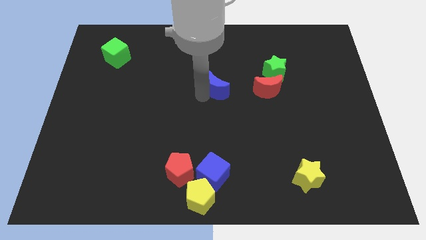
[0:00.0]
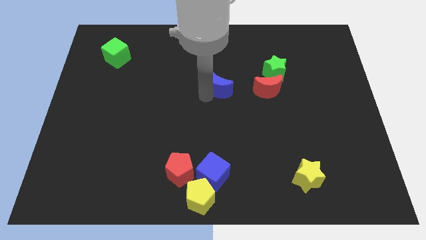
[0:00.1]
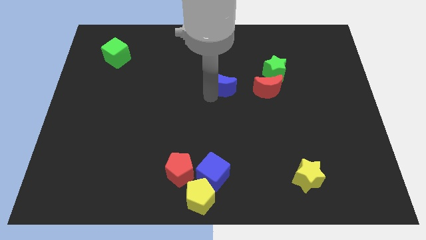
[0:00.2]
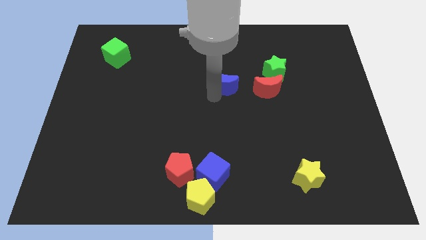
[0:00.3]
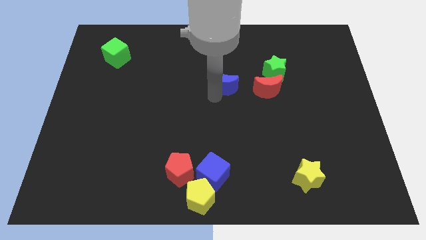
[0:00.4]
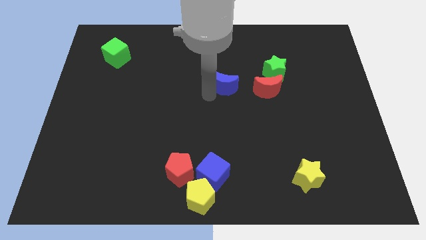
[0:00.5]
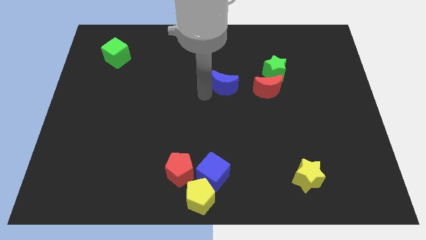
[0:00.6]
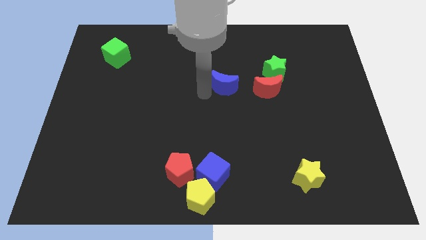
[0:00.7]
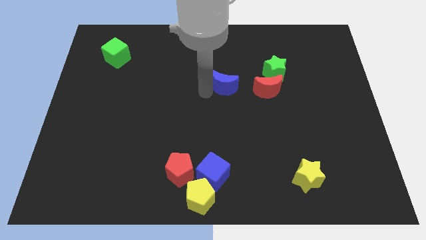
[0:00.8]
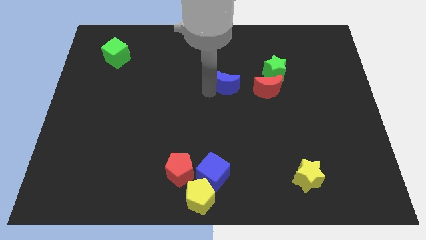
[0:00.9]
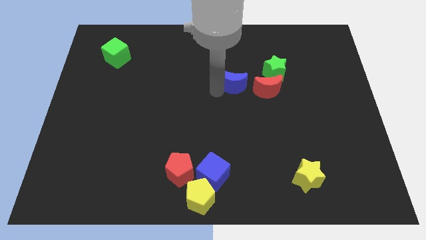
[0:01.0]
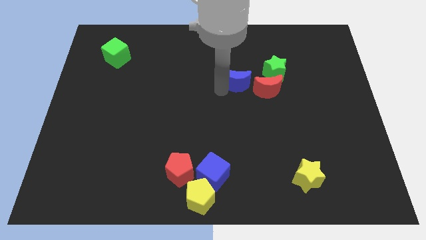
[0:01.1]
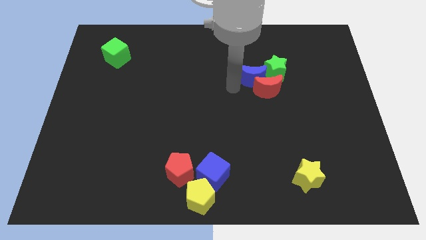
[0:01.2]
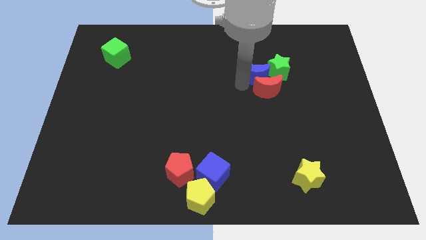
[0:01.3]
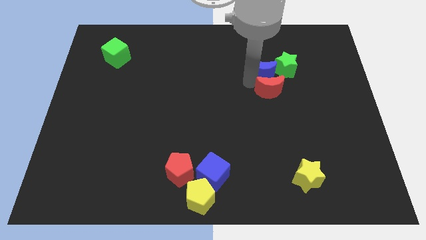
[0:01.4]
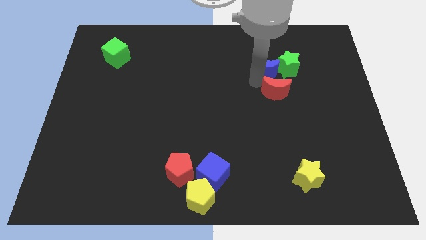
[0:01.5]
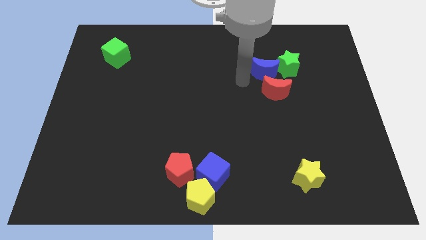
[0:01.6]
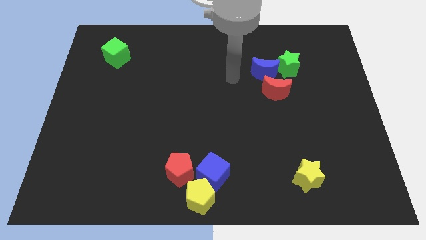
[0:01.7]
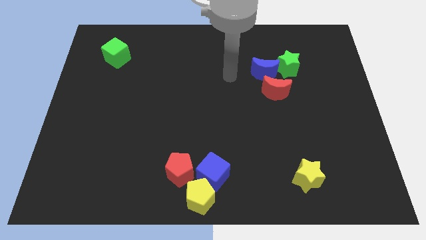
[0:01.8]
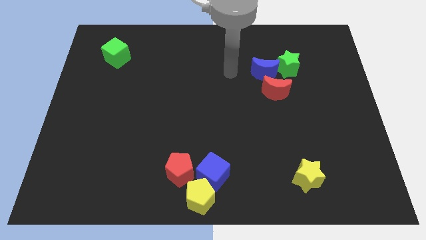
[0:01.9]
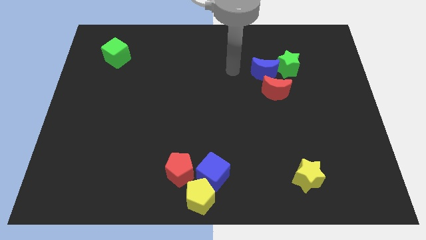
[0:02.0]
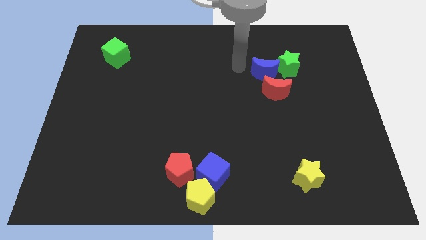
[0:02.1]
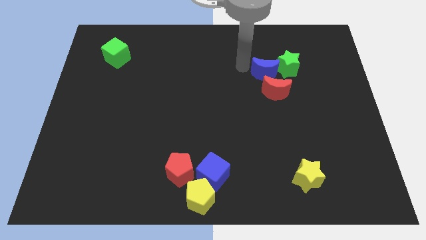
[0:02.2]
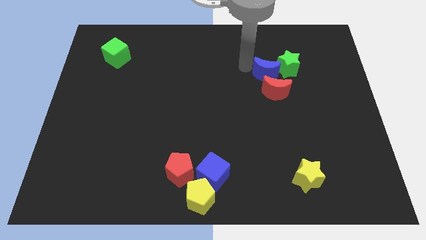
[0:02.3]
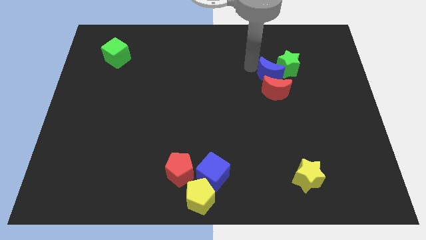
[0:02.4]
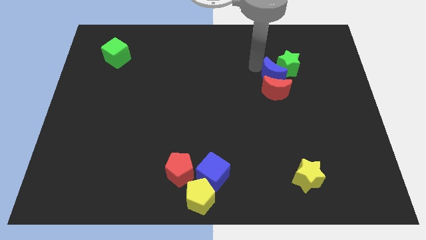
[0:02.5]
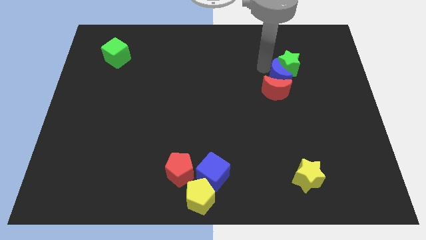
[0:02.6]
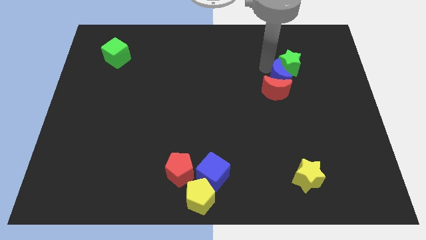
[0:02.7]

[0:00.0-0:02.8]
place blue moon between green star and red moon

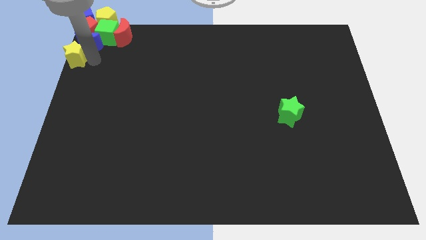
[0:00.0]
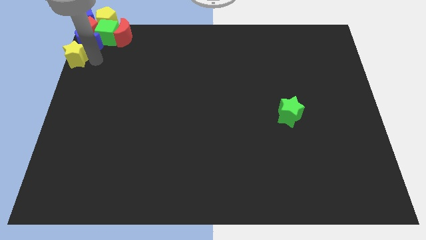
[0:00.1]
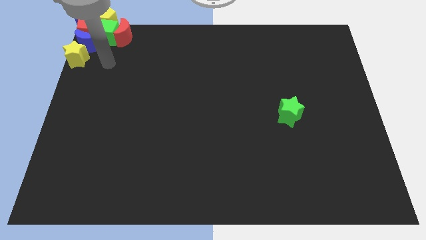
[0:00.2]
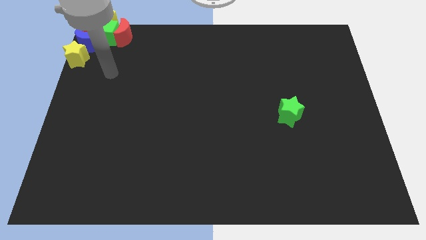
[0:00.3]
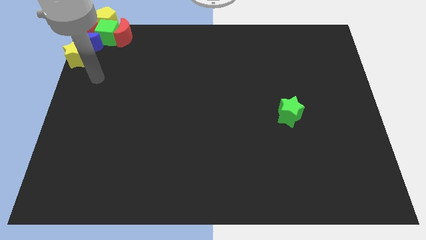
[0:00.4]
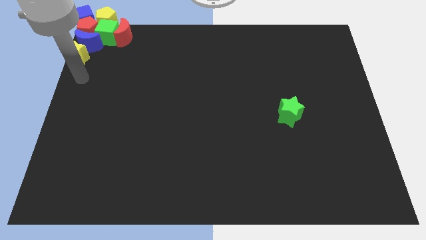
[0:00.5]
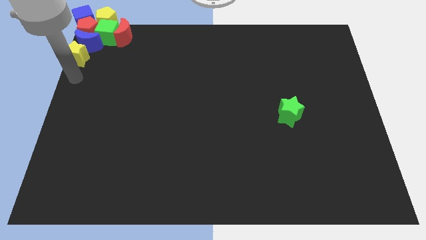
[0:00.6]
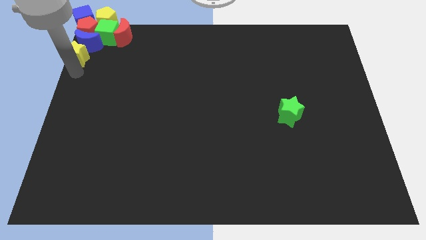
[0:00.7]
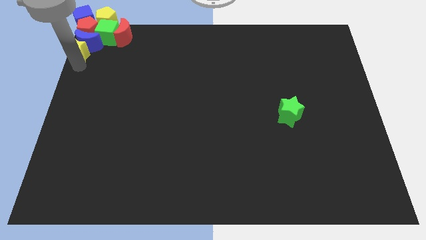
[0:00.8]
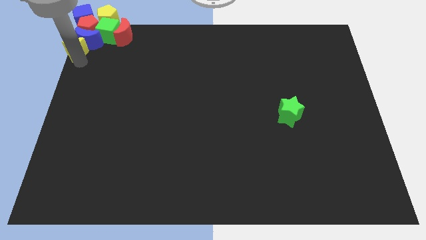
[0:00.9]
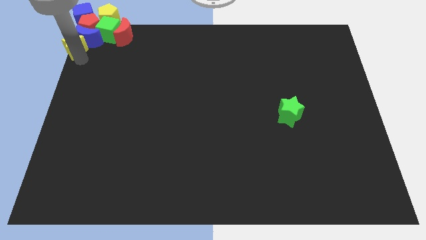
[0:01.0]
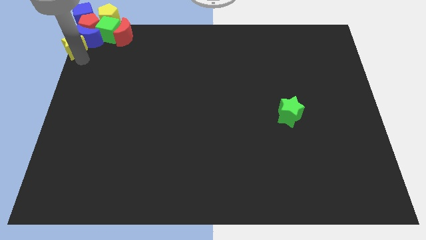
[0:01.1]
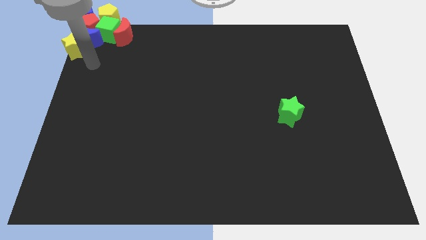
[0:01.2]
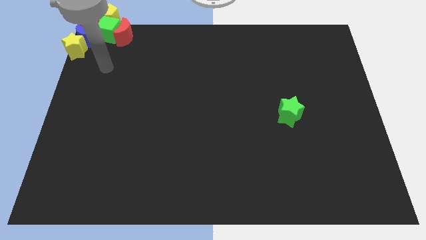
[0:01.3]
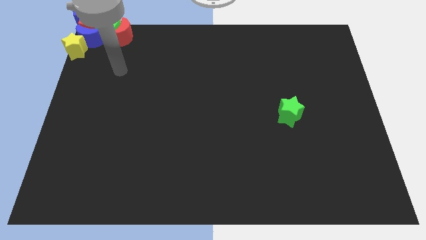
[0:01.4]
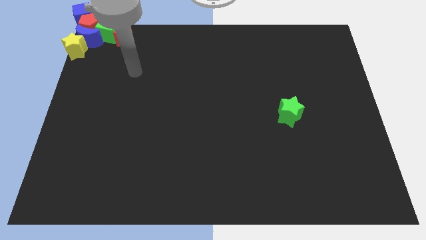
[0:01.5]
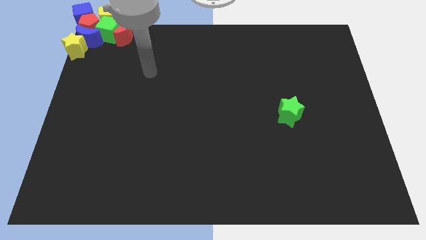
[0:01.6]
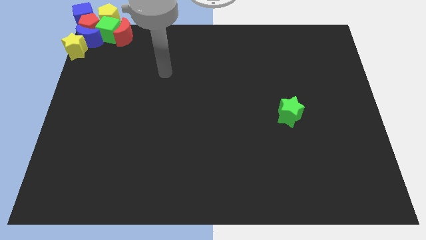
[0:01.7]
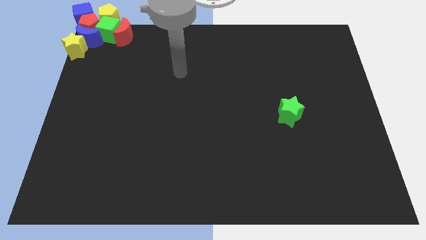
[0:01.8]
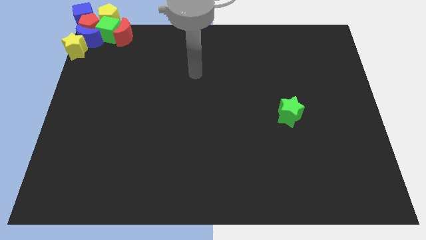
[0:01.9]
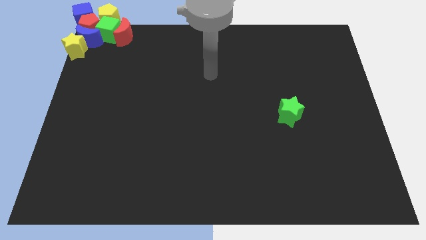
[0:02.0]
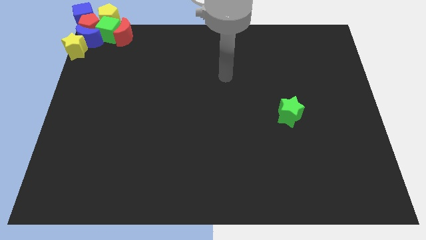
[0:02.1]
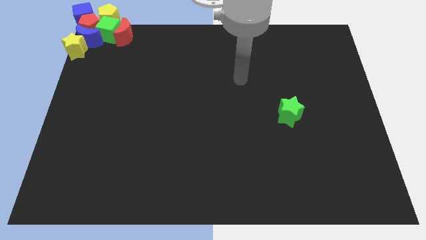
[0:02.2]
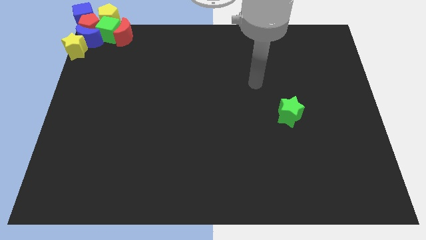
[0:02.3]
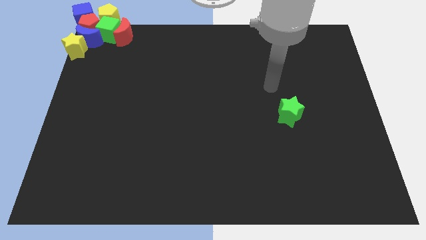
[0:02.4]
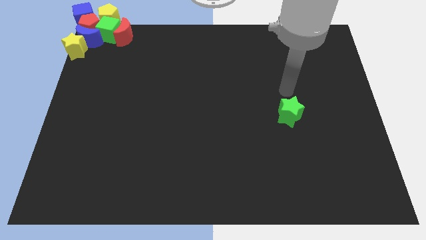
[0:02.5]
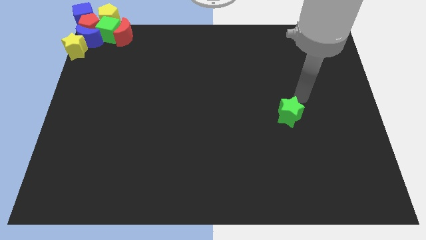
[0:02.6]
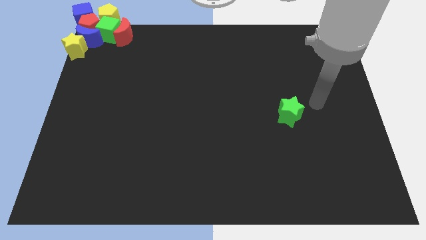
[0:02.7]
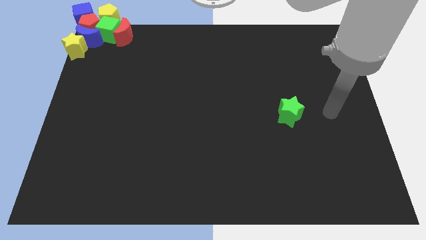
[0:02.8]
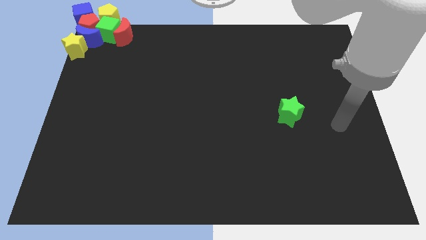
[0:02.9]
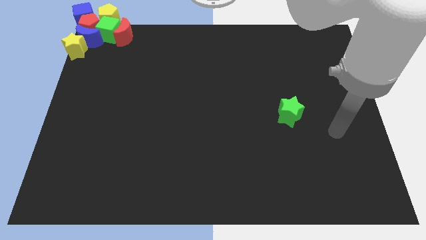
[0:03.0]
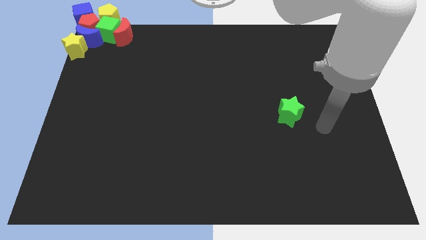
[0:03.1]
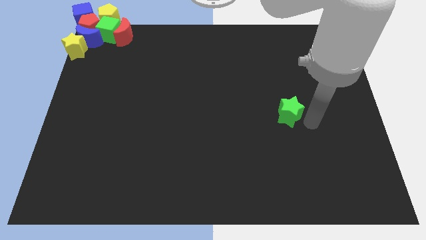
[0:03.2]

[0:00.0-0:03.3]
move your arm from the yellow star to green cube

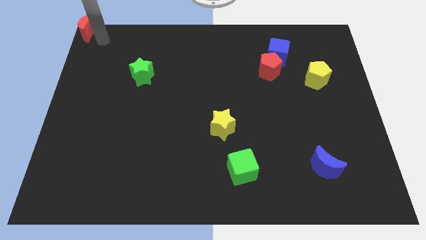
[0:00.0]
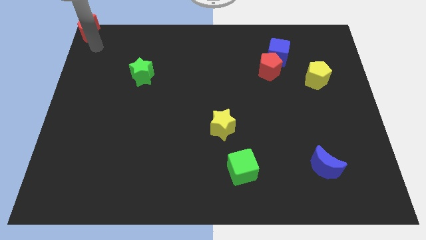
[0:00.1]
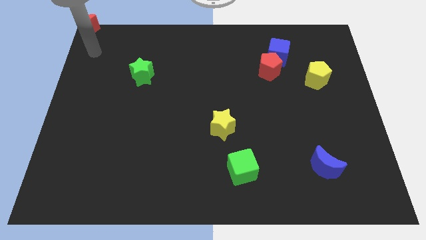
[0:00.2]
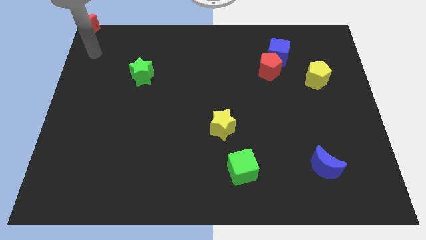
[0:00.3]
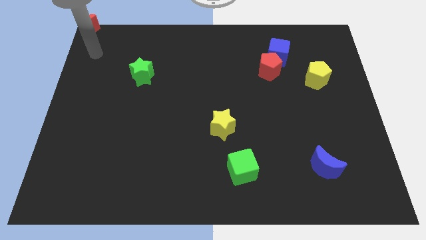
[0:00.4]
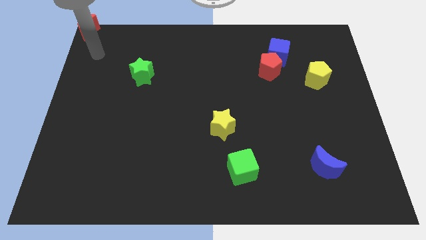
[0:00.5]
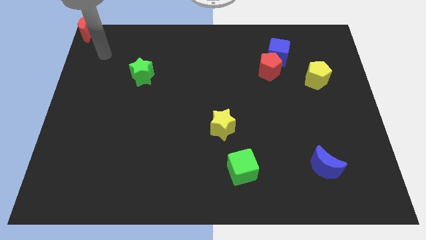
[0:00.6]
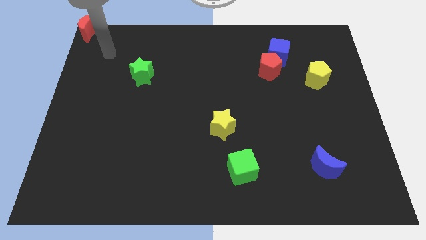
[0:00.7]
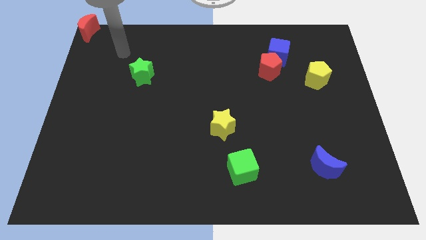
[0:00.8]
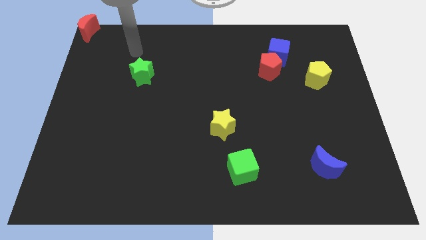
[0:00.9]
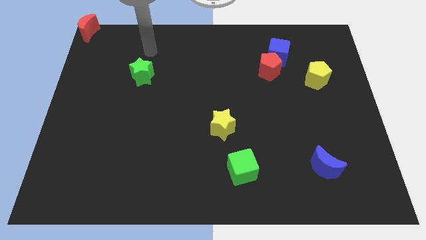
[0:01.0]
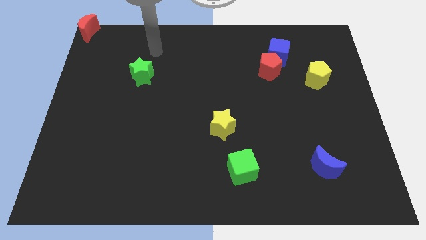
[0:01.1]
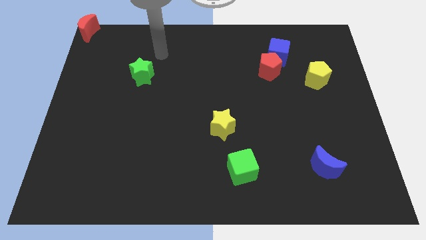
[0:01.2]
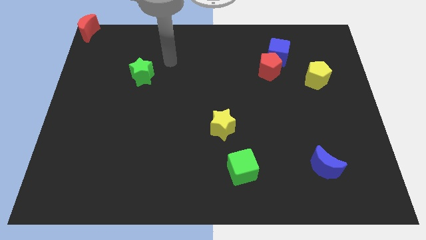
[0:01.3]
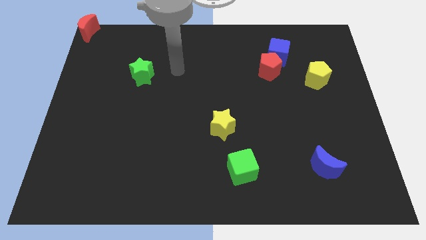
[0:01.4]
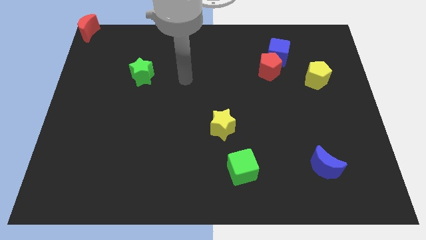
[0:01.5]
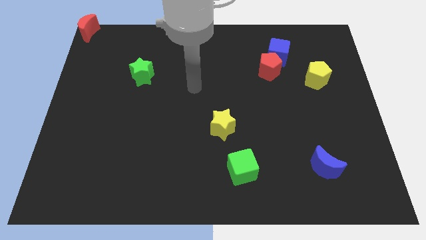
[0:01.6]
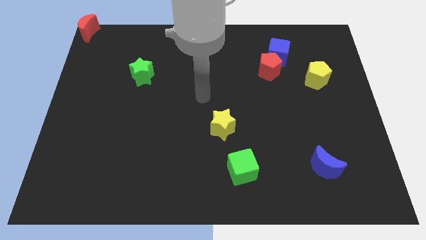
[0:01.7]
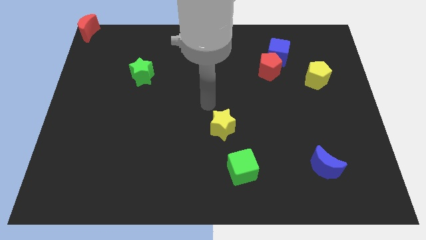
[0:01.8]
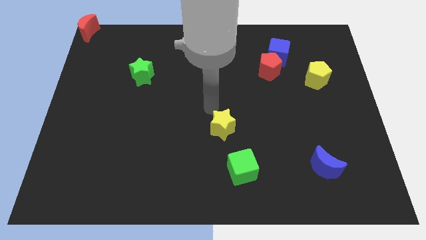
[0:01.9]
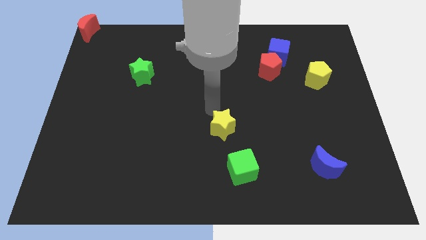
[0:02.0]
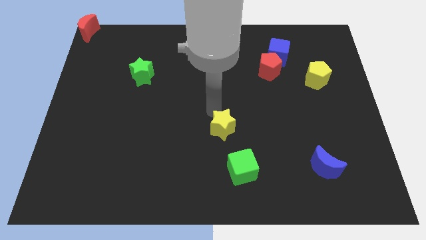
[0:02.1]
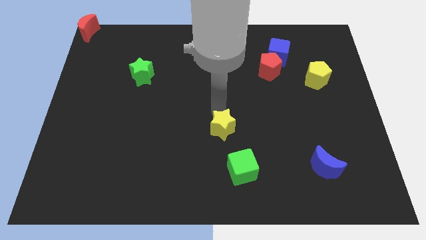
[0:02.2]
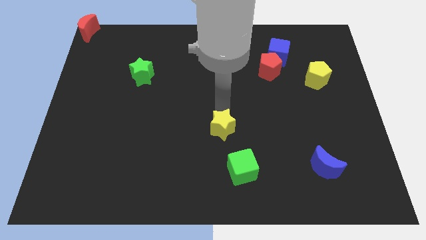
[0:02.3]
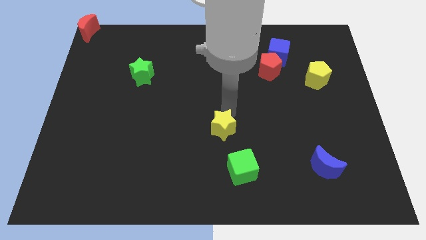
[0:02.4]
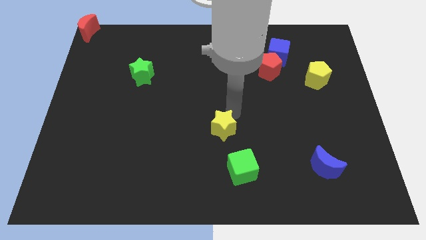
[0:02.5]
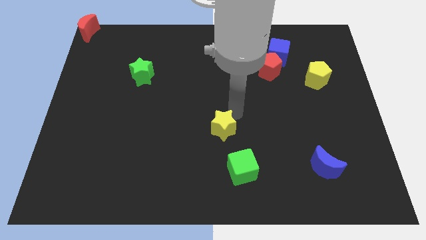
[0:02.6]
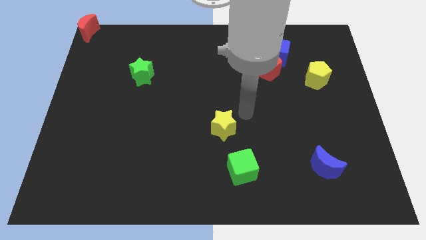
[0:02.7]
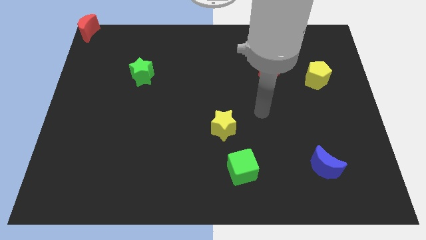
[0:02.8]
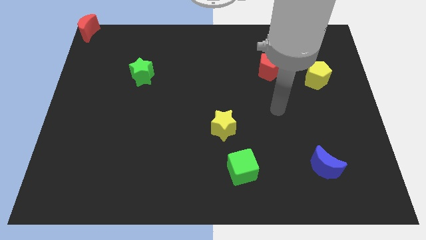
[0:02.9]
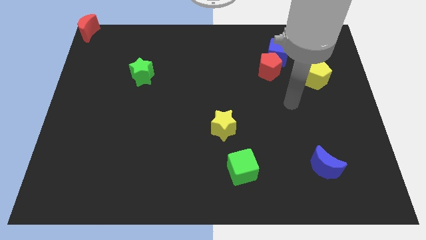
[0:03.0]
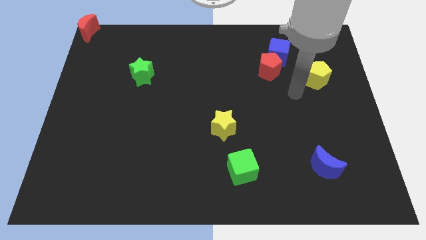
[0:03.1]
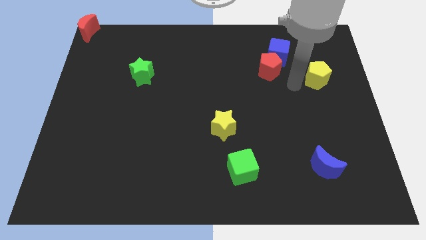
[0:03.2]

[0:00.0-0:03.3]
slightly push the yellow star towards the bottom side
